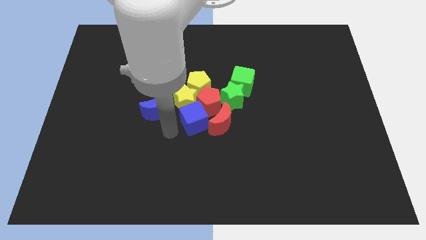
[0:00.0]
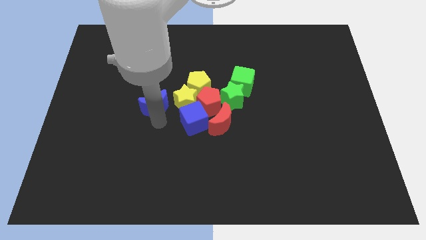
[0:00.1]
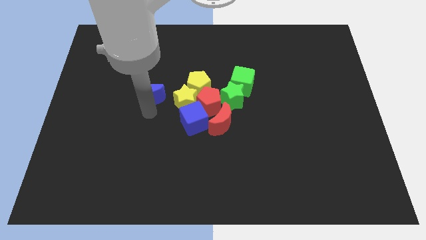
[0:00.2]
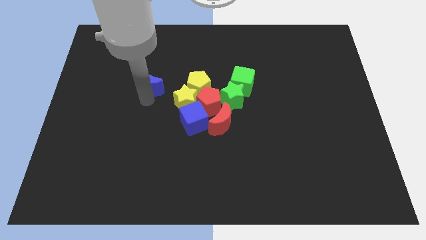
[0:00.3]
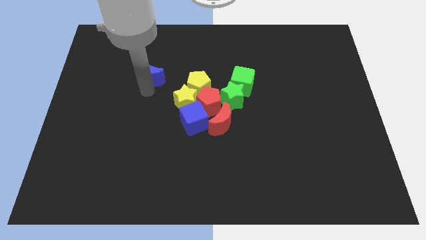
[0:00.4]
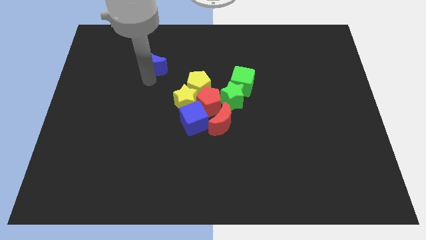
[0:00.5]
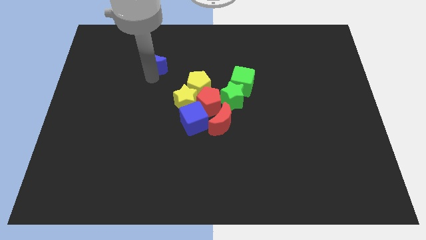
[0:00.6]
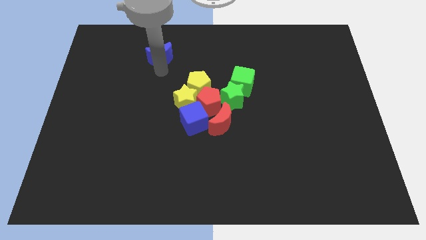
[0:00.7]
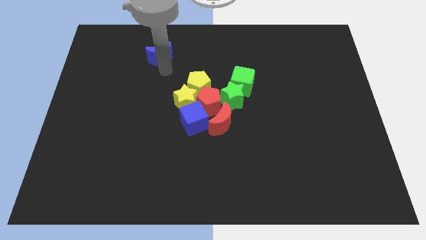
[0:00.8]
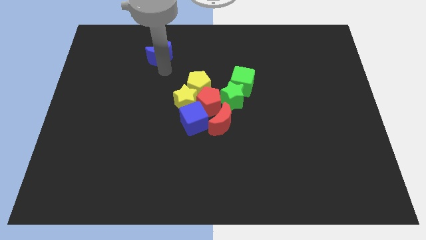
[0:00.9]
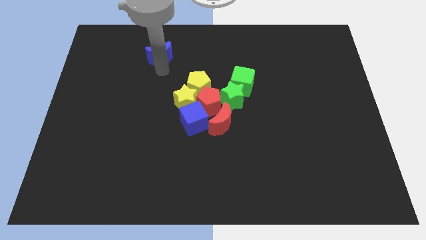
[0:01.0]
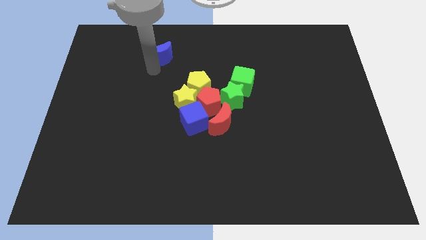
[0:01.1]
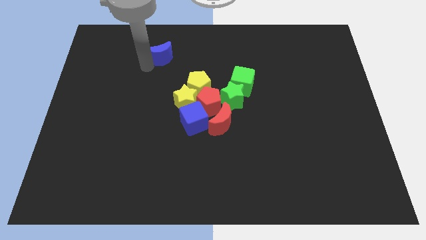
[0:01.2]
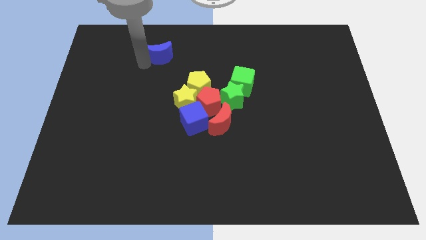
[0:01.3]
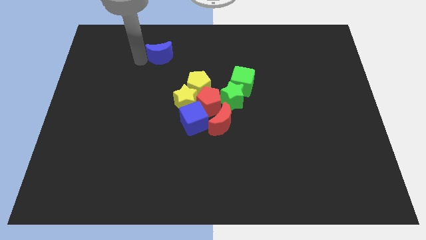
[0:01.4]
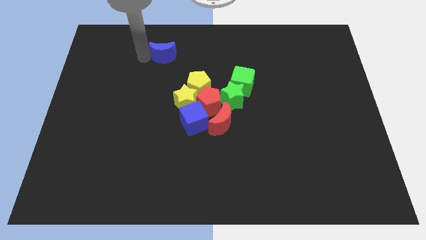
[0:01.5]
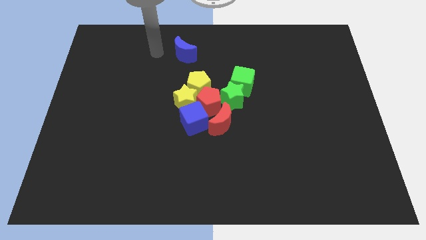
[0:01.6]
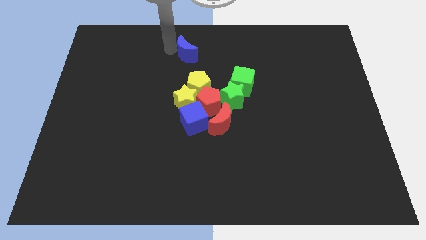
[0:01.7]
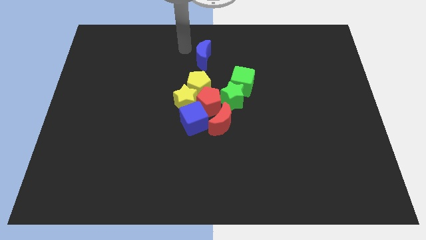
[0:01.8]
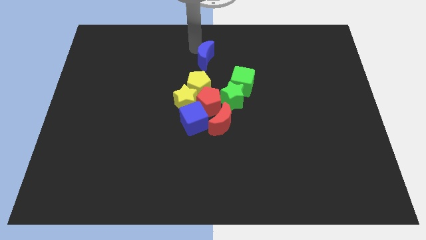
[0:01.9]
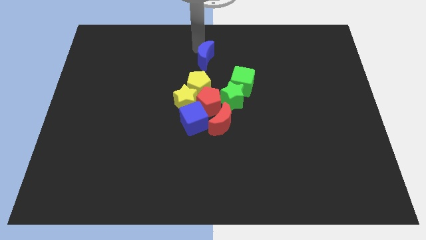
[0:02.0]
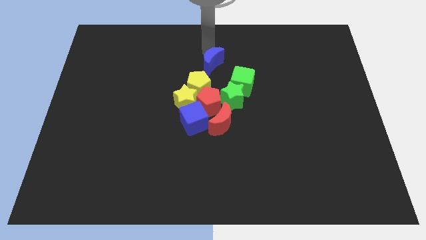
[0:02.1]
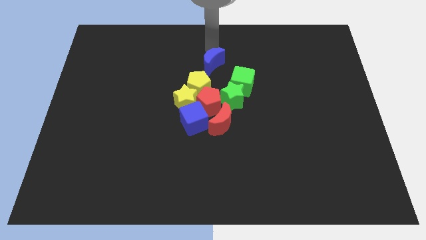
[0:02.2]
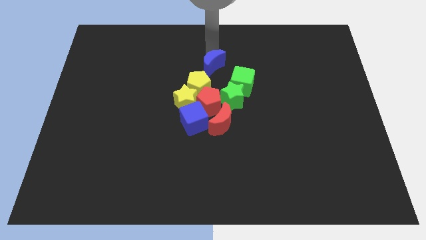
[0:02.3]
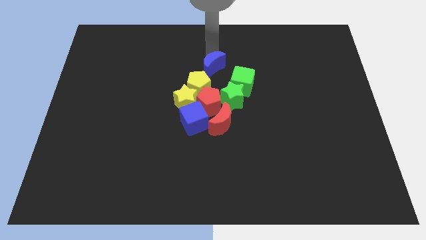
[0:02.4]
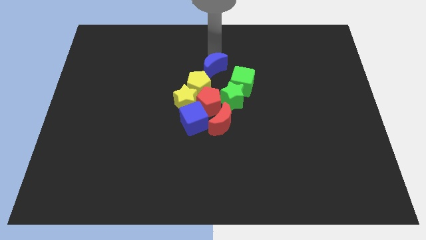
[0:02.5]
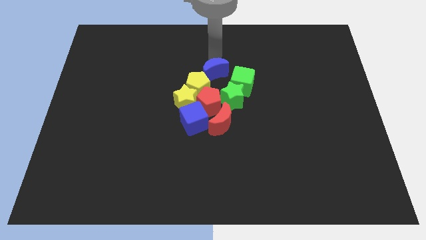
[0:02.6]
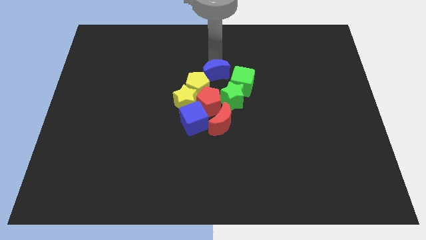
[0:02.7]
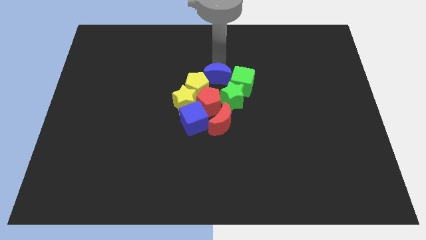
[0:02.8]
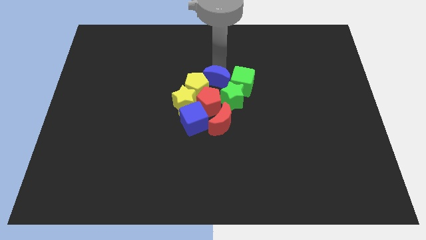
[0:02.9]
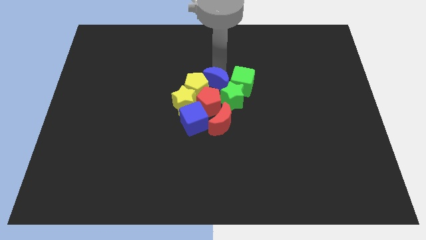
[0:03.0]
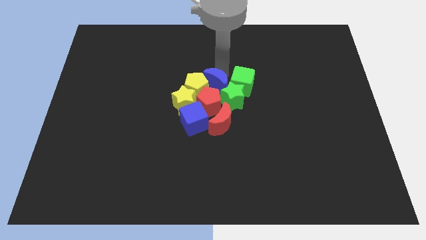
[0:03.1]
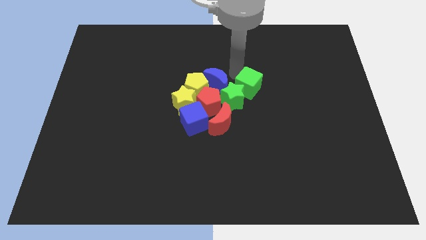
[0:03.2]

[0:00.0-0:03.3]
push the blue crescent into the yellow pentagon

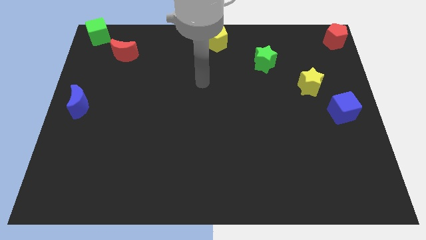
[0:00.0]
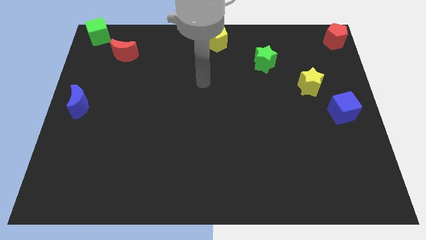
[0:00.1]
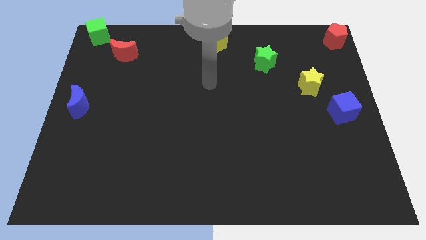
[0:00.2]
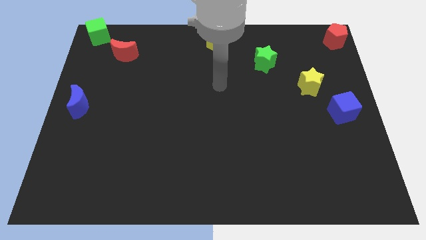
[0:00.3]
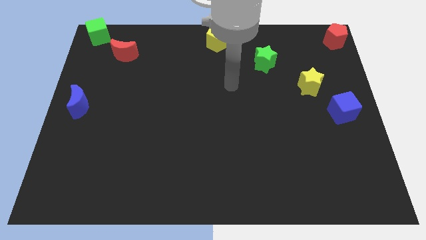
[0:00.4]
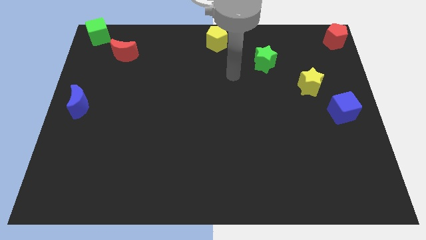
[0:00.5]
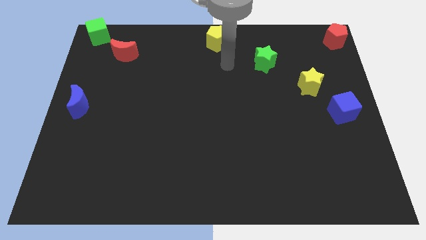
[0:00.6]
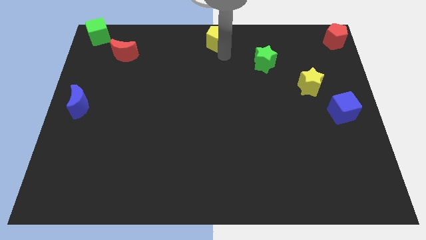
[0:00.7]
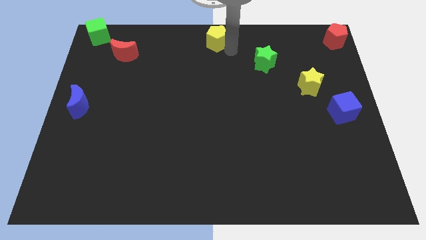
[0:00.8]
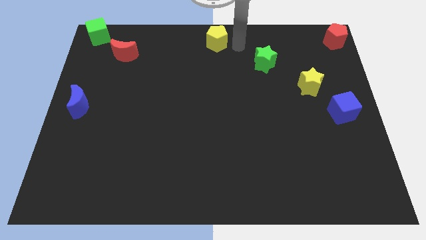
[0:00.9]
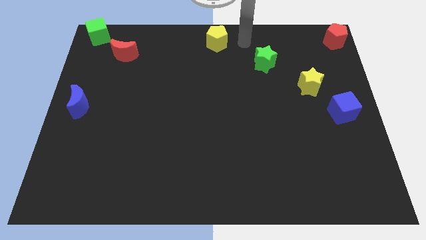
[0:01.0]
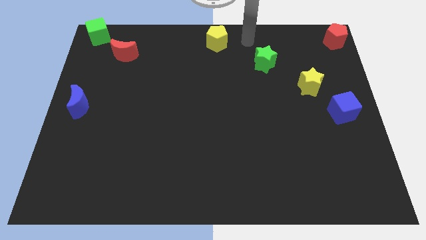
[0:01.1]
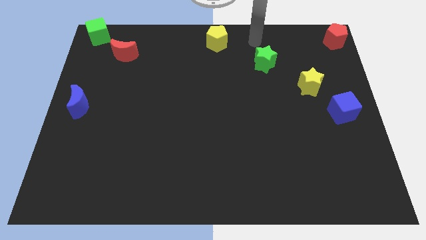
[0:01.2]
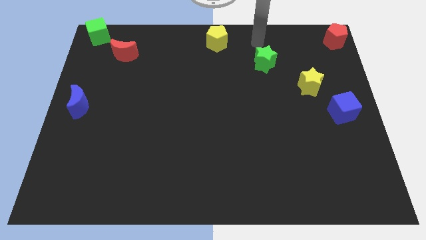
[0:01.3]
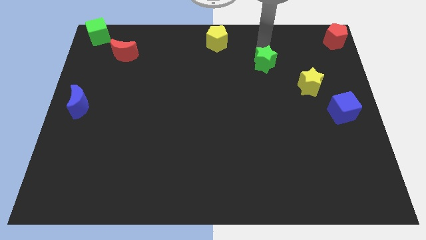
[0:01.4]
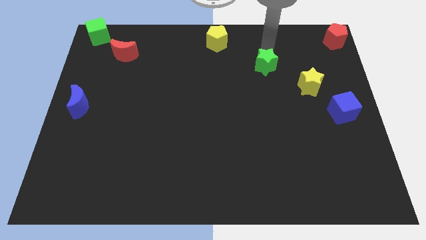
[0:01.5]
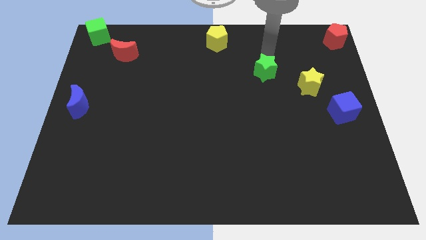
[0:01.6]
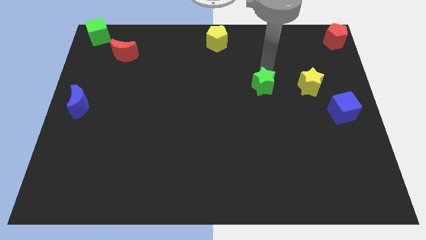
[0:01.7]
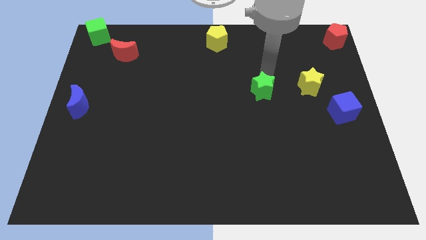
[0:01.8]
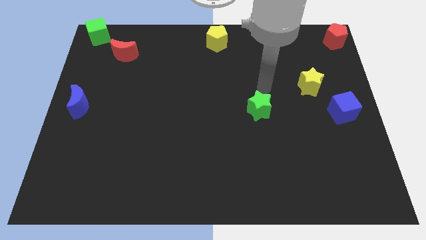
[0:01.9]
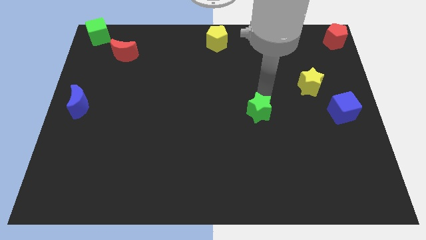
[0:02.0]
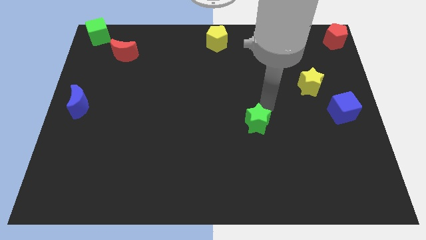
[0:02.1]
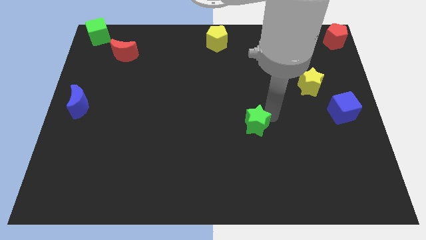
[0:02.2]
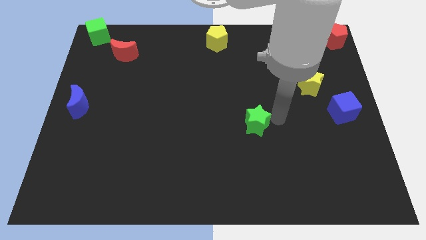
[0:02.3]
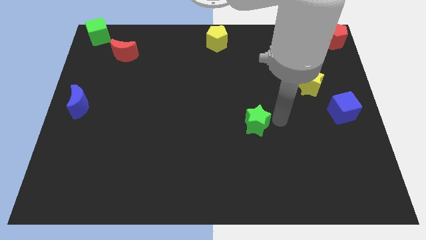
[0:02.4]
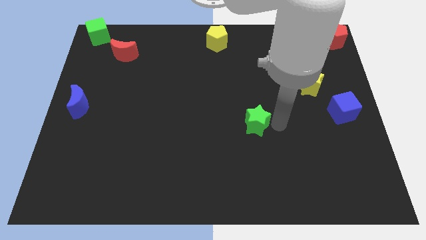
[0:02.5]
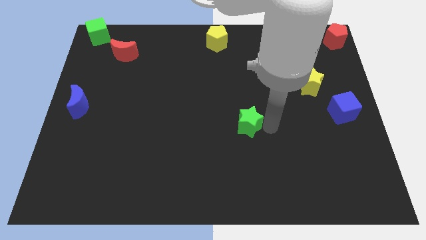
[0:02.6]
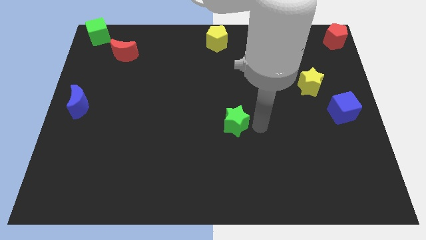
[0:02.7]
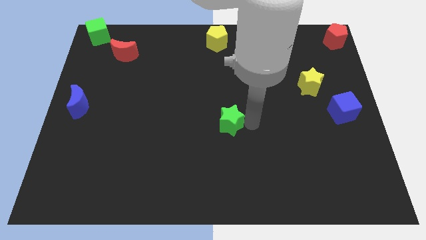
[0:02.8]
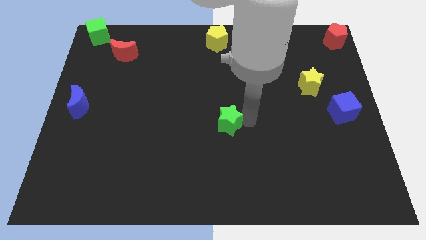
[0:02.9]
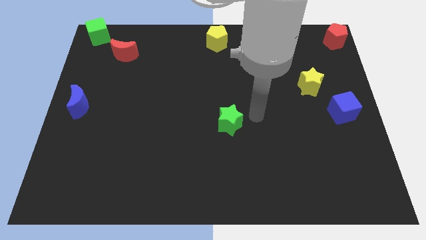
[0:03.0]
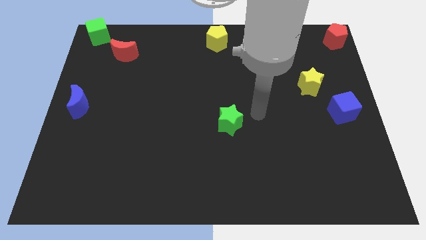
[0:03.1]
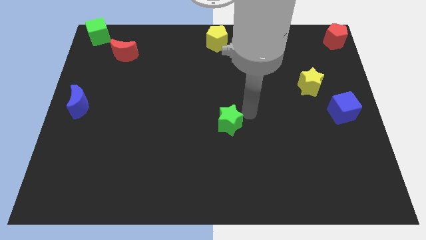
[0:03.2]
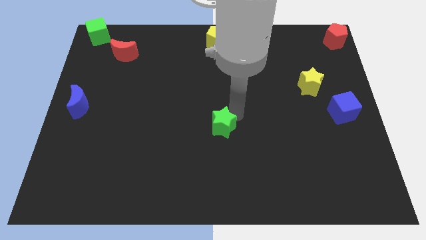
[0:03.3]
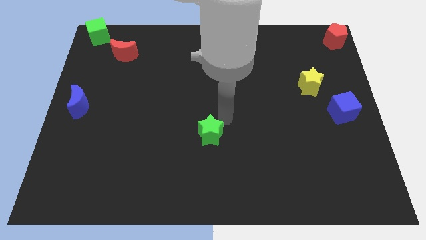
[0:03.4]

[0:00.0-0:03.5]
move the green star to center of the board

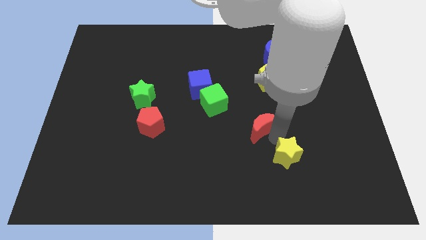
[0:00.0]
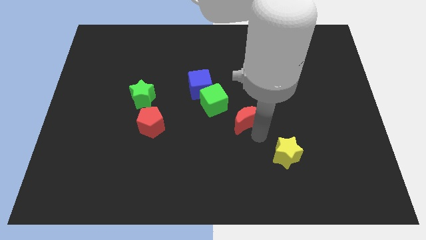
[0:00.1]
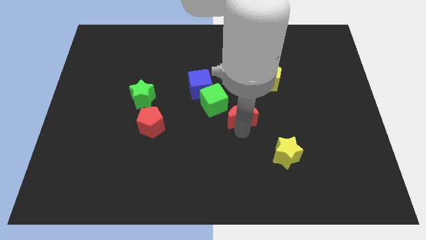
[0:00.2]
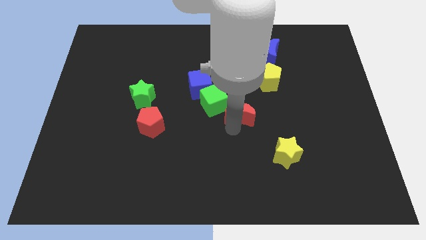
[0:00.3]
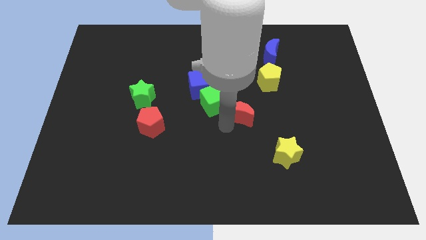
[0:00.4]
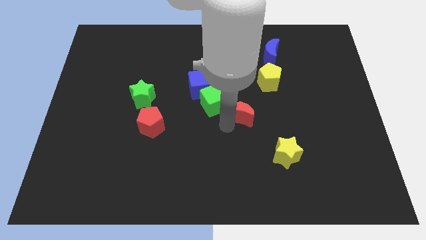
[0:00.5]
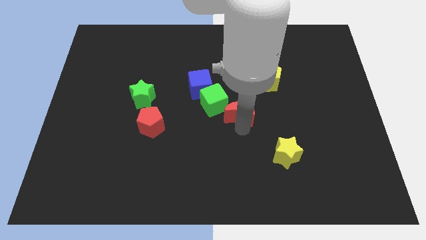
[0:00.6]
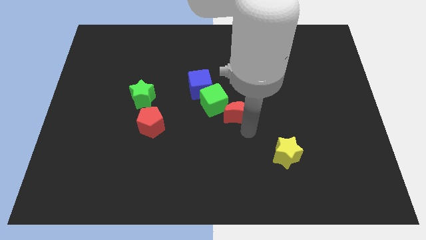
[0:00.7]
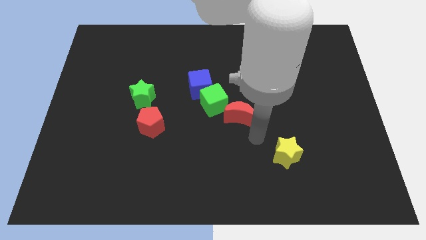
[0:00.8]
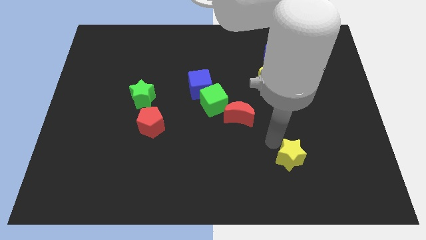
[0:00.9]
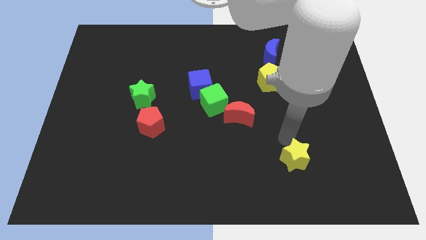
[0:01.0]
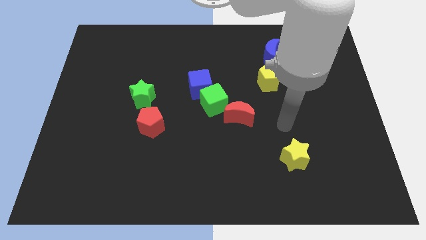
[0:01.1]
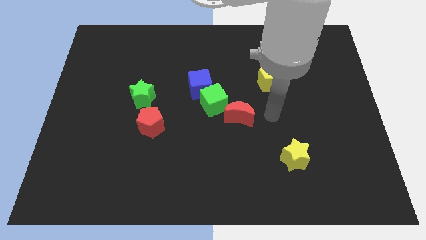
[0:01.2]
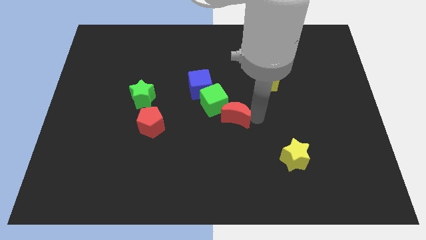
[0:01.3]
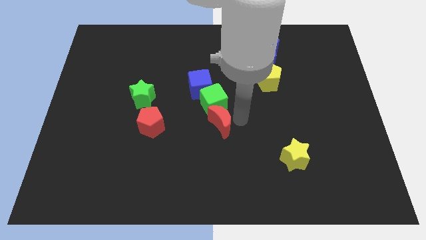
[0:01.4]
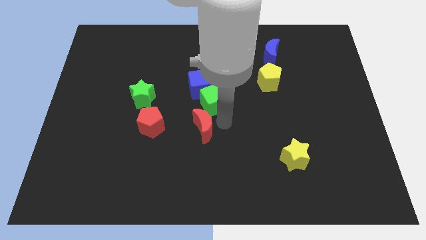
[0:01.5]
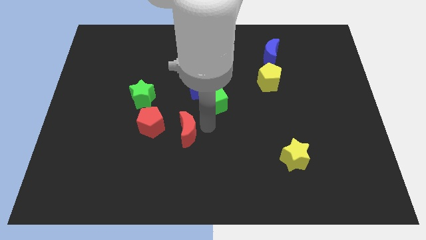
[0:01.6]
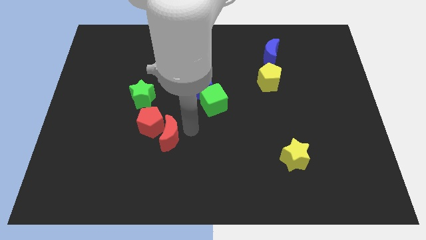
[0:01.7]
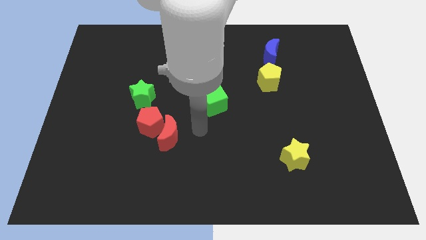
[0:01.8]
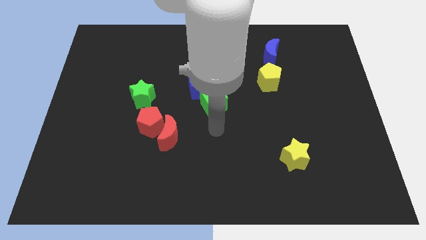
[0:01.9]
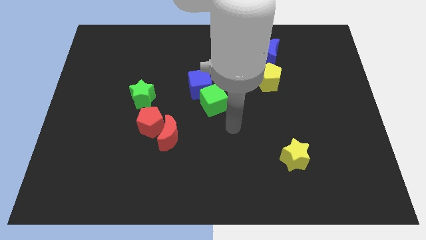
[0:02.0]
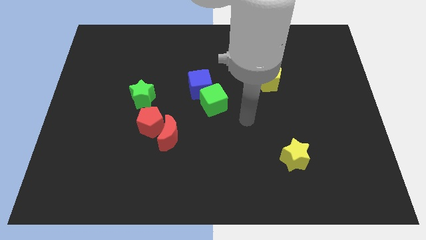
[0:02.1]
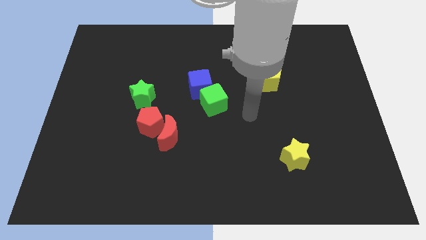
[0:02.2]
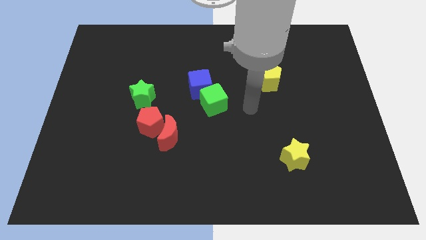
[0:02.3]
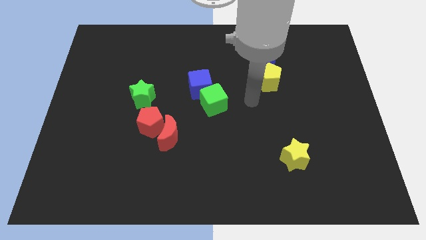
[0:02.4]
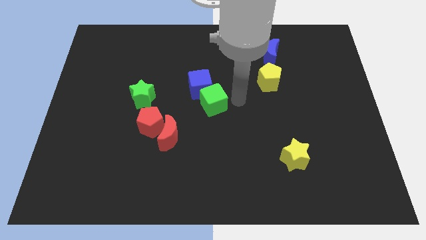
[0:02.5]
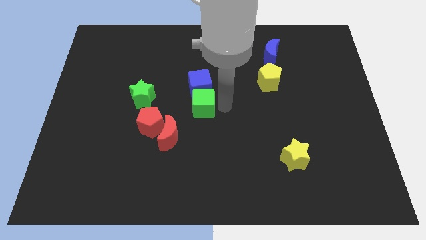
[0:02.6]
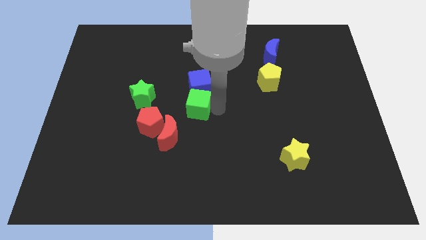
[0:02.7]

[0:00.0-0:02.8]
slide red moon into red pentagon
